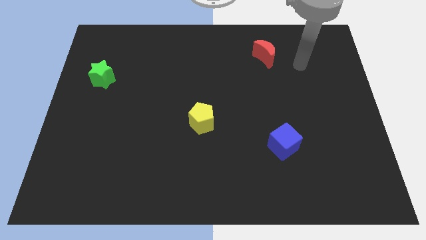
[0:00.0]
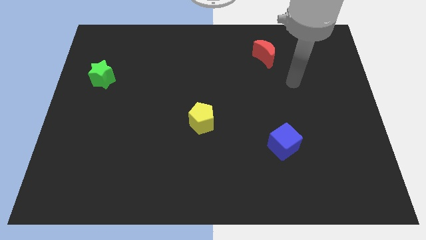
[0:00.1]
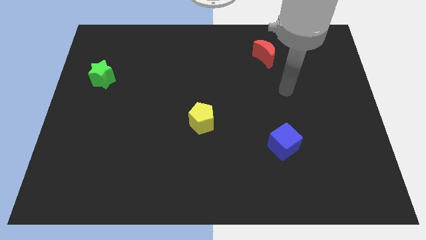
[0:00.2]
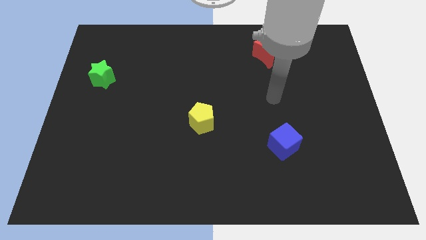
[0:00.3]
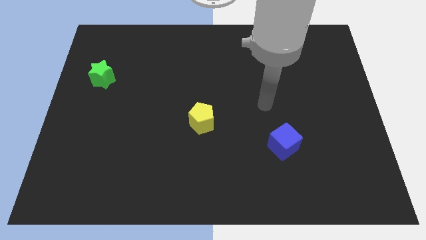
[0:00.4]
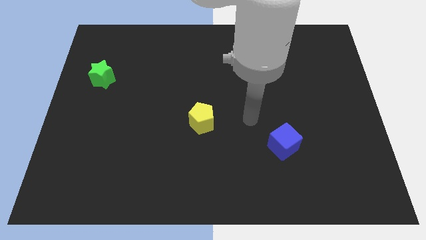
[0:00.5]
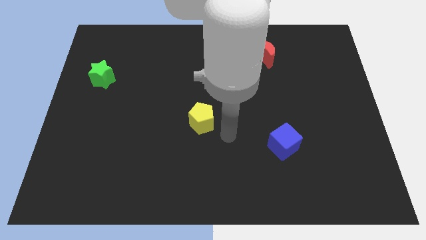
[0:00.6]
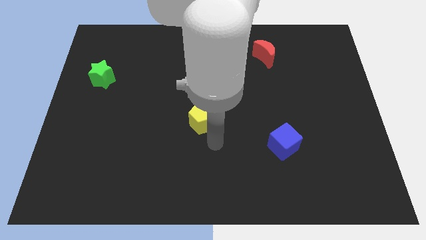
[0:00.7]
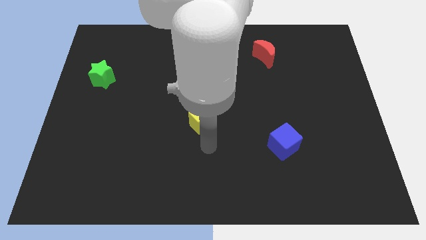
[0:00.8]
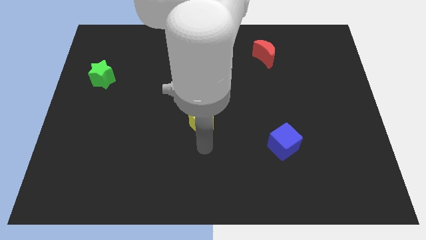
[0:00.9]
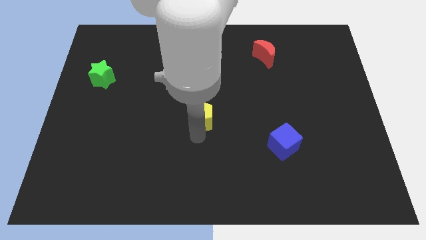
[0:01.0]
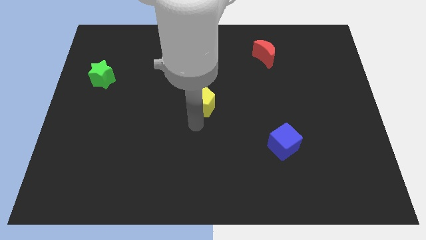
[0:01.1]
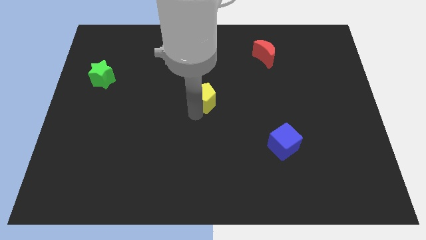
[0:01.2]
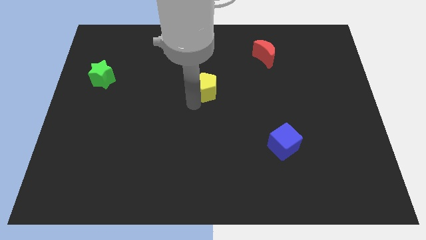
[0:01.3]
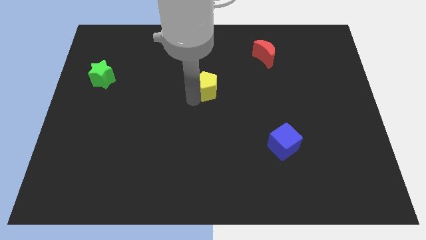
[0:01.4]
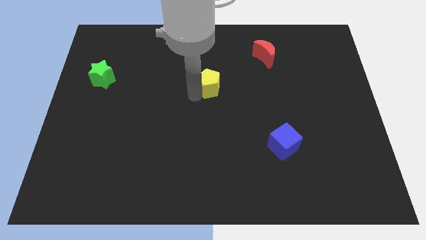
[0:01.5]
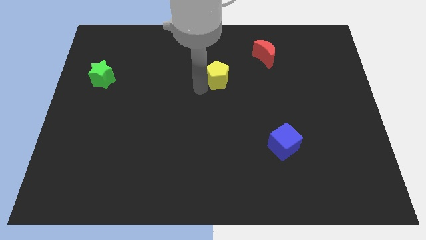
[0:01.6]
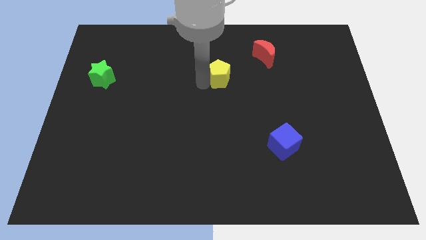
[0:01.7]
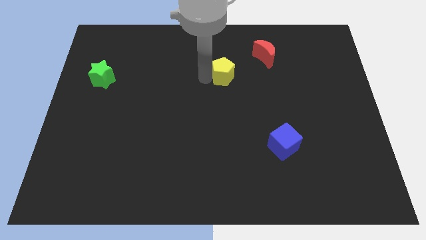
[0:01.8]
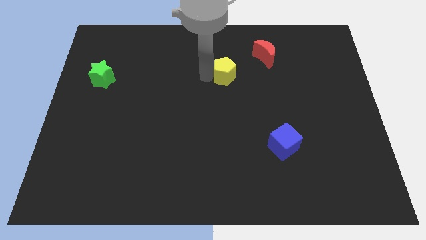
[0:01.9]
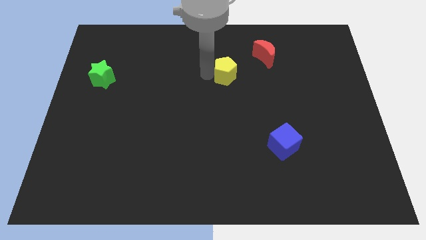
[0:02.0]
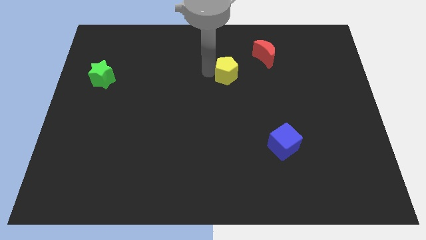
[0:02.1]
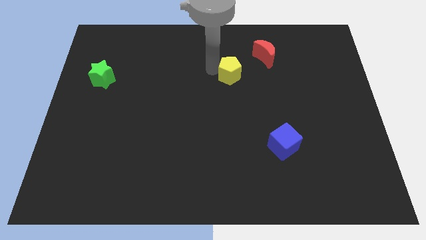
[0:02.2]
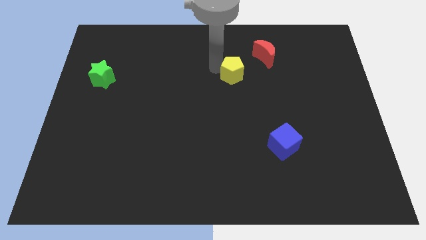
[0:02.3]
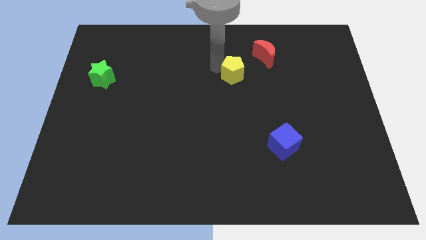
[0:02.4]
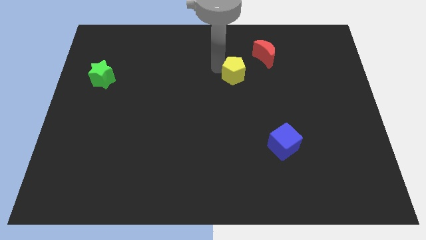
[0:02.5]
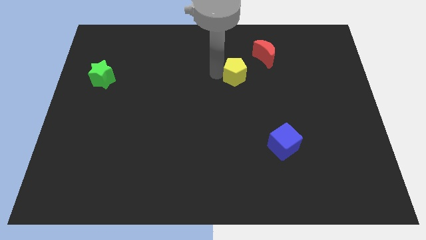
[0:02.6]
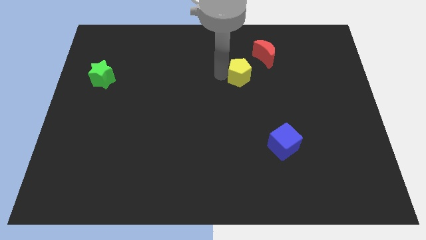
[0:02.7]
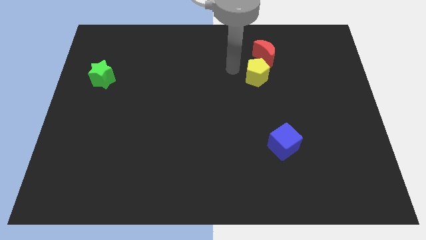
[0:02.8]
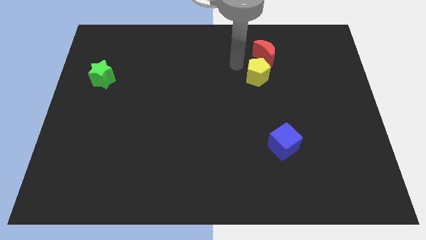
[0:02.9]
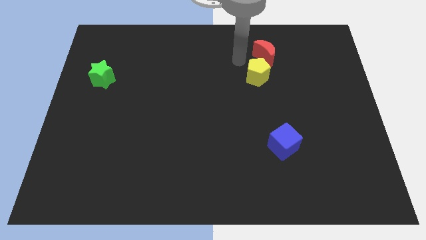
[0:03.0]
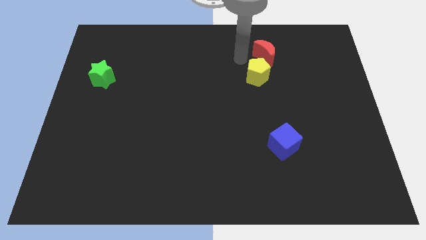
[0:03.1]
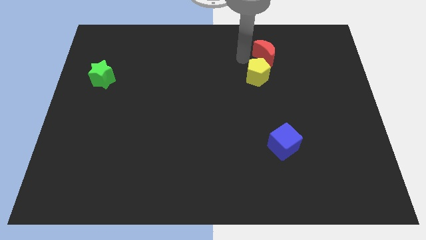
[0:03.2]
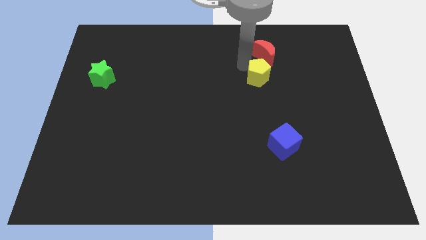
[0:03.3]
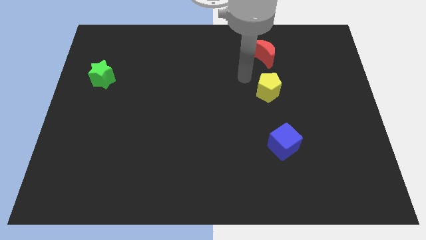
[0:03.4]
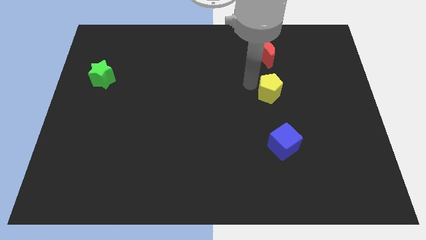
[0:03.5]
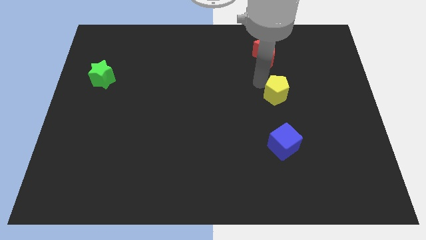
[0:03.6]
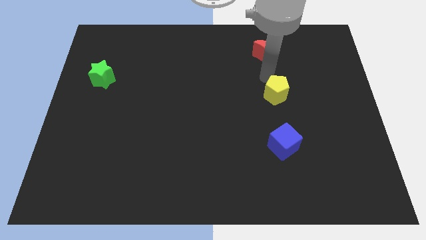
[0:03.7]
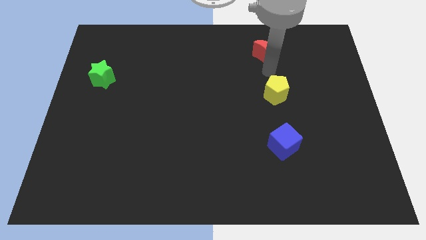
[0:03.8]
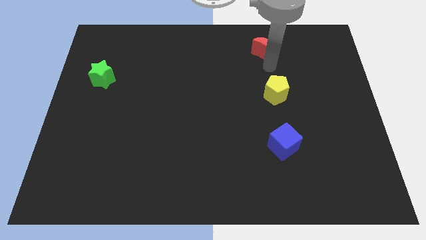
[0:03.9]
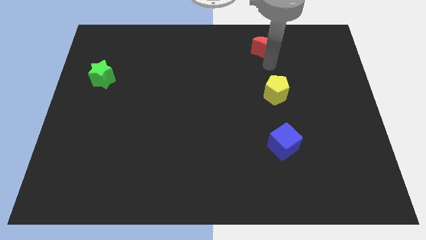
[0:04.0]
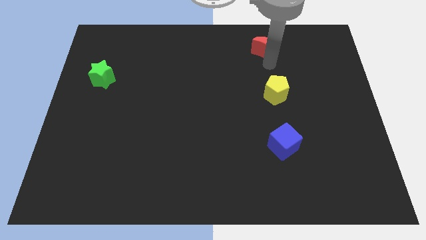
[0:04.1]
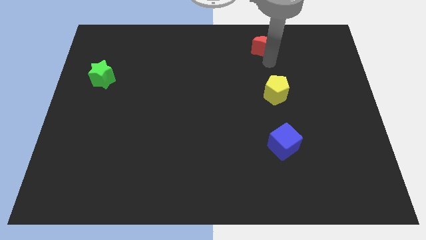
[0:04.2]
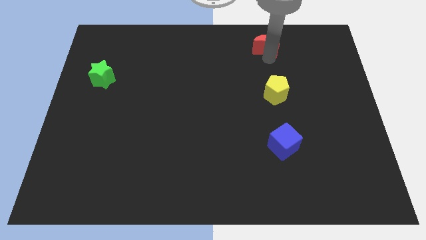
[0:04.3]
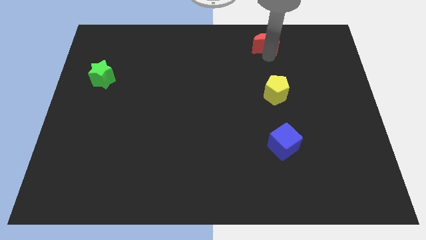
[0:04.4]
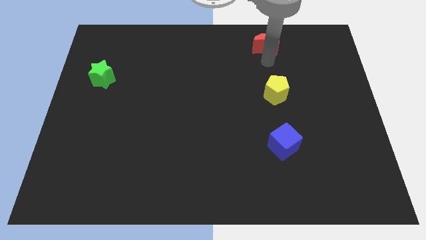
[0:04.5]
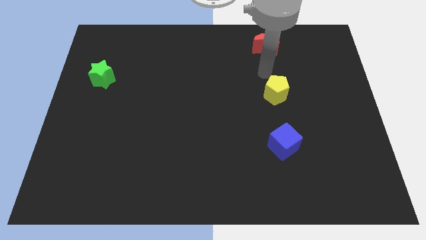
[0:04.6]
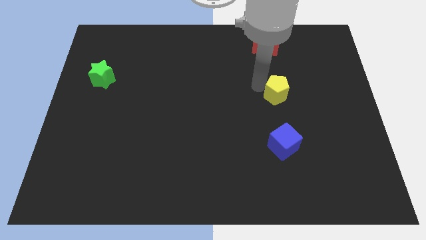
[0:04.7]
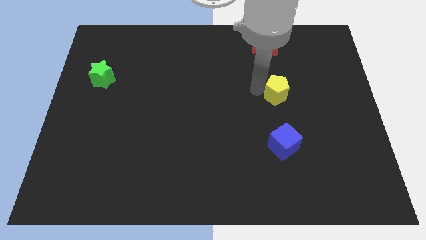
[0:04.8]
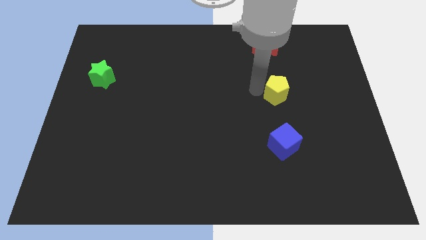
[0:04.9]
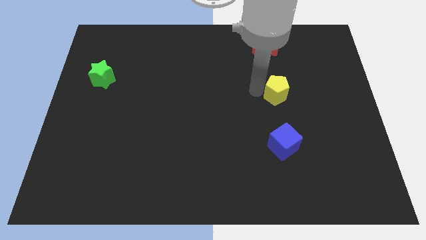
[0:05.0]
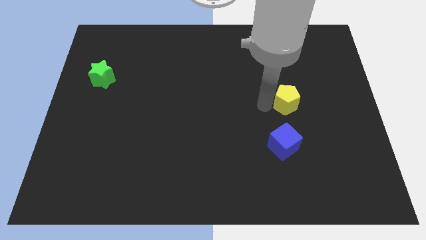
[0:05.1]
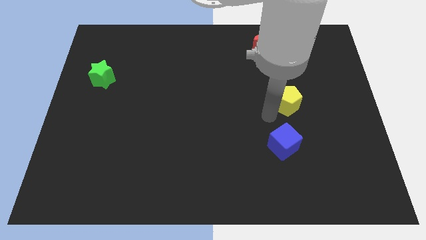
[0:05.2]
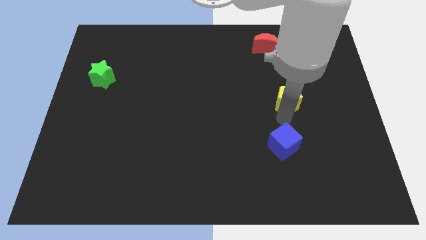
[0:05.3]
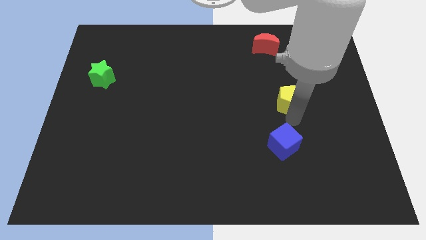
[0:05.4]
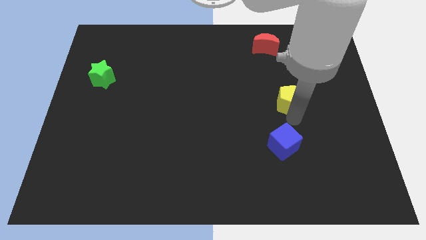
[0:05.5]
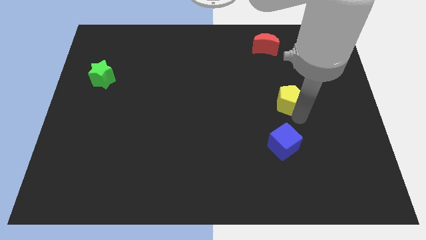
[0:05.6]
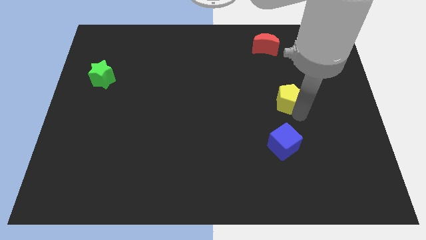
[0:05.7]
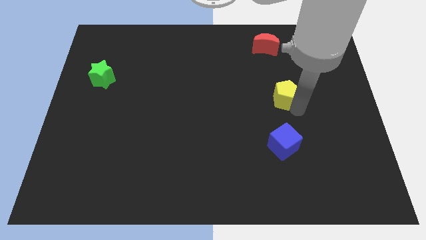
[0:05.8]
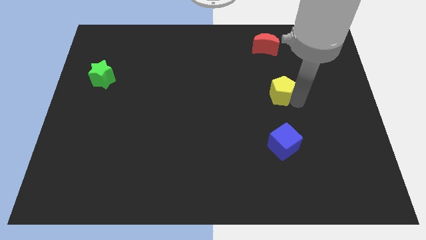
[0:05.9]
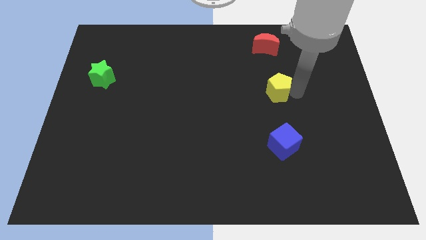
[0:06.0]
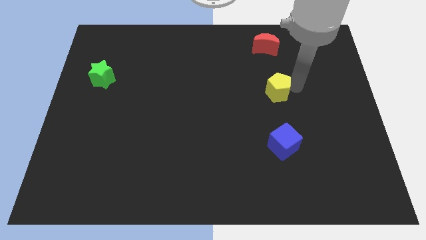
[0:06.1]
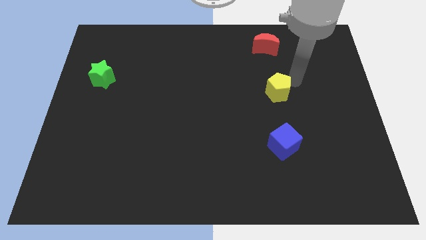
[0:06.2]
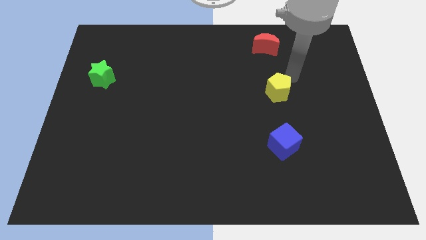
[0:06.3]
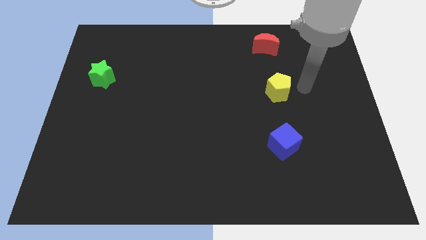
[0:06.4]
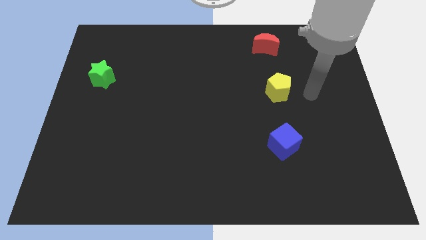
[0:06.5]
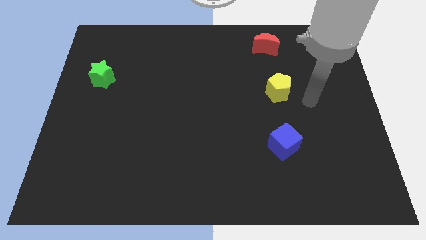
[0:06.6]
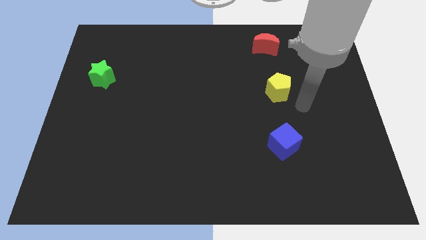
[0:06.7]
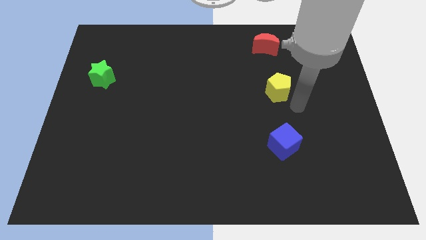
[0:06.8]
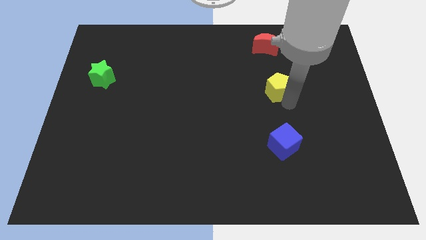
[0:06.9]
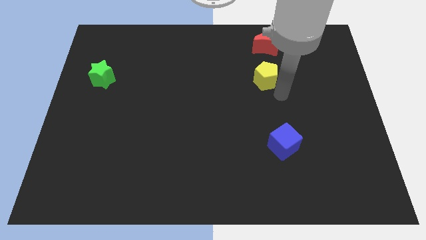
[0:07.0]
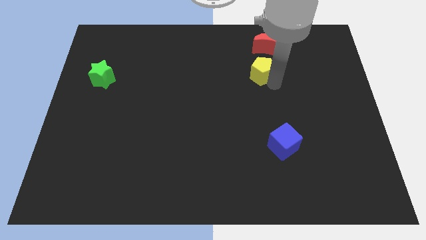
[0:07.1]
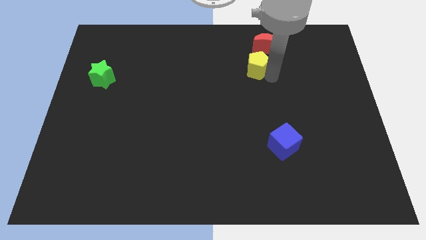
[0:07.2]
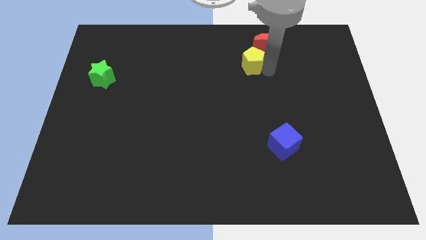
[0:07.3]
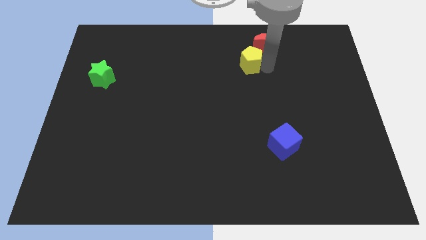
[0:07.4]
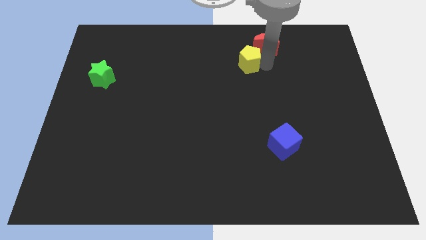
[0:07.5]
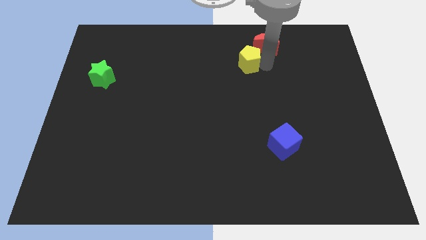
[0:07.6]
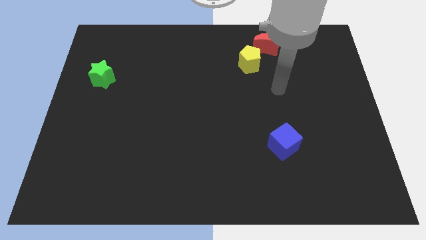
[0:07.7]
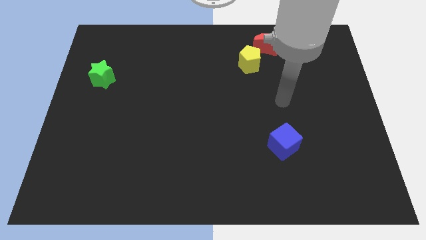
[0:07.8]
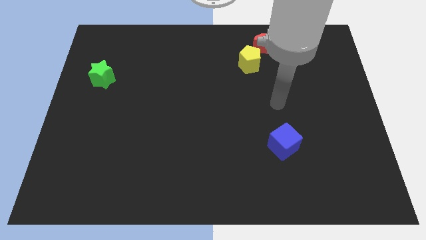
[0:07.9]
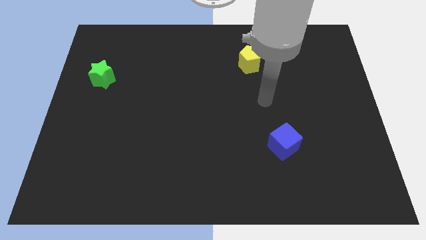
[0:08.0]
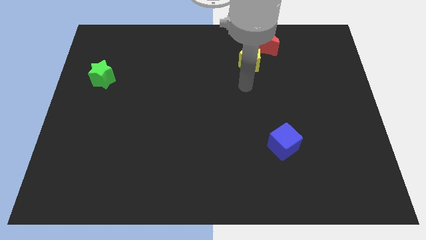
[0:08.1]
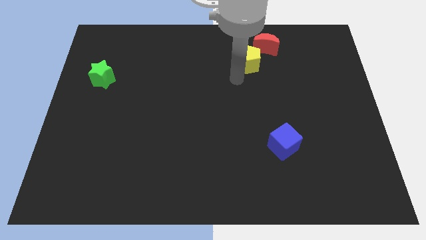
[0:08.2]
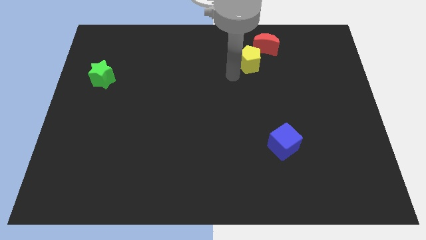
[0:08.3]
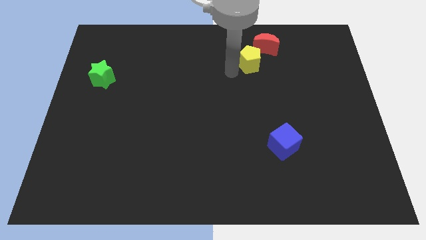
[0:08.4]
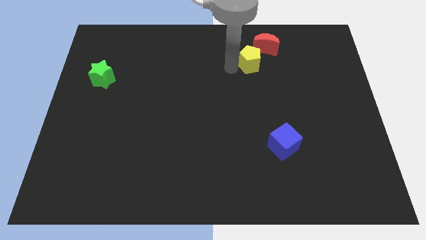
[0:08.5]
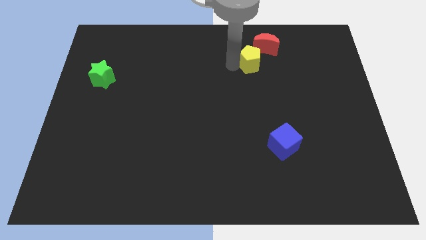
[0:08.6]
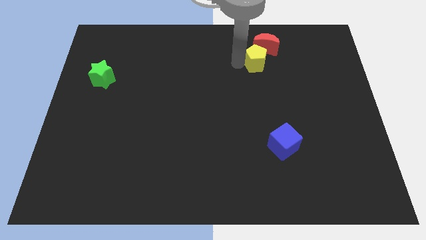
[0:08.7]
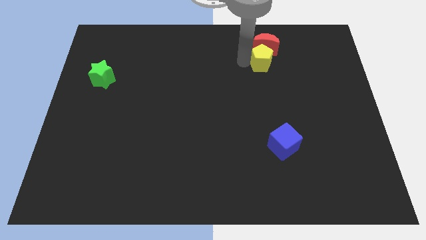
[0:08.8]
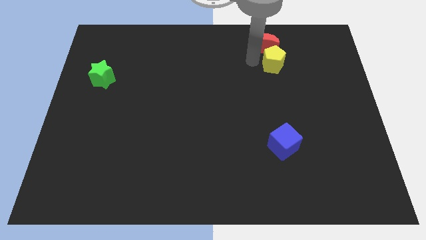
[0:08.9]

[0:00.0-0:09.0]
push the yellow pentagon towards the red block
